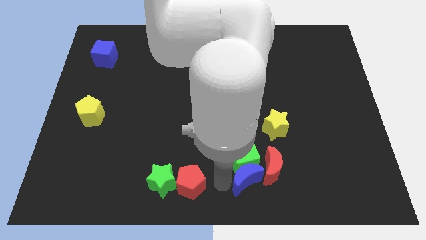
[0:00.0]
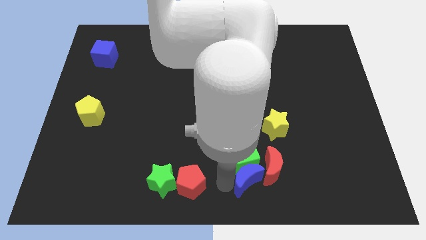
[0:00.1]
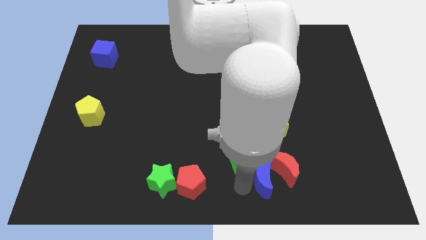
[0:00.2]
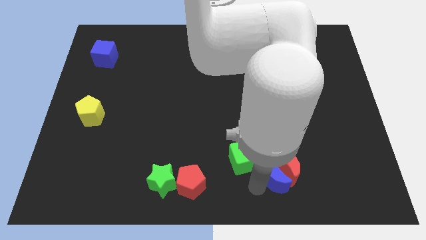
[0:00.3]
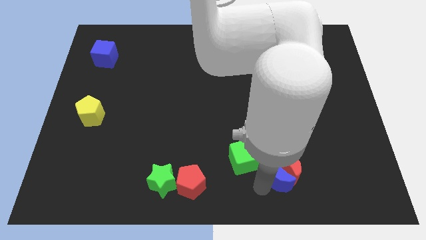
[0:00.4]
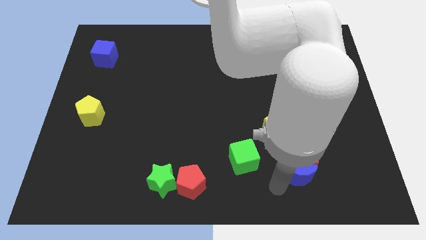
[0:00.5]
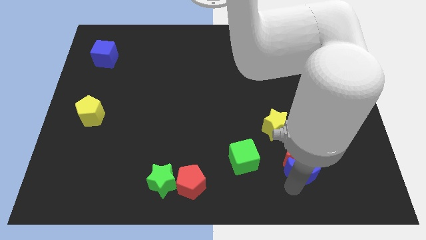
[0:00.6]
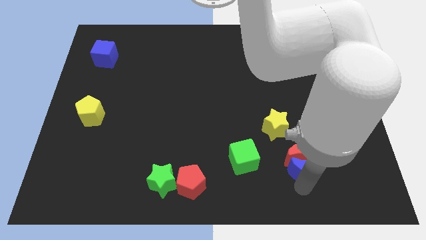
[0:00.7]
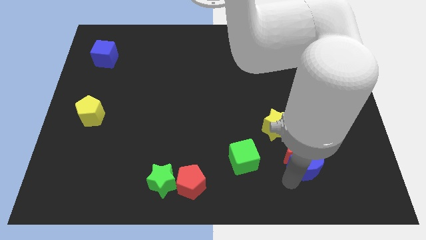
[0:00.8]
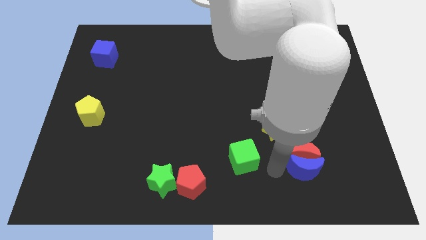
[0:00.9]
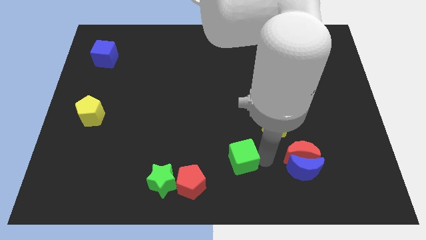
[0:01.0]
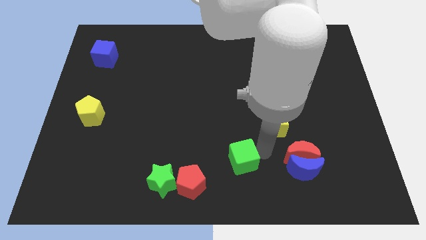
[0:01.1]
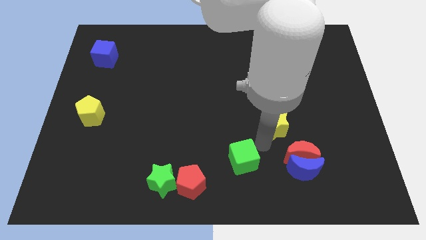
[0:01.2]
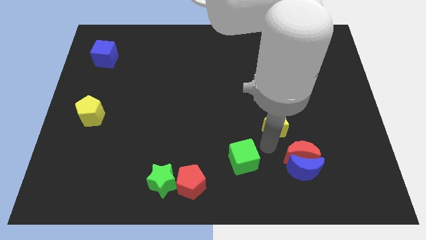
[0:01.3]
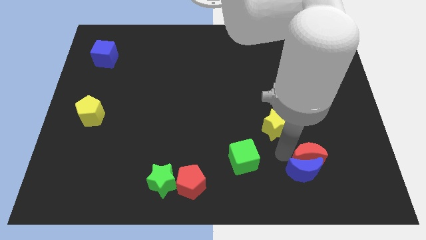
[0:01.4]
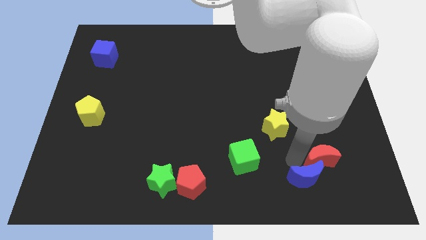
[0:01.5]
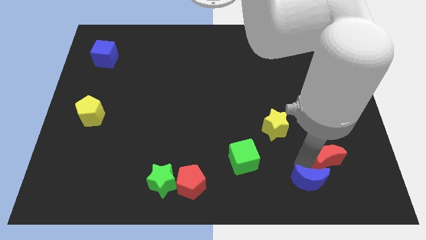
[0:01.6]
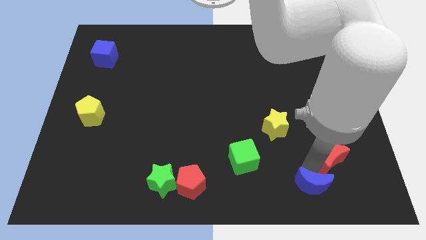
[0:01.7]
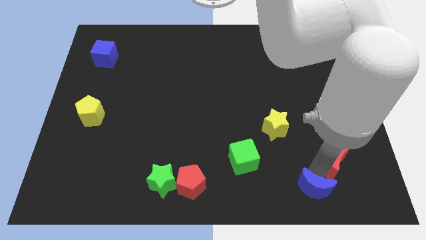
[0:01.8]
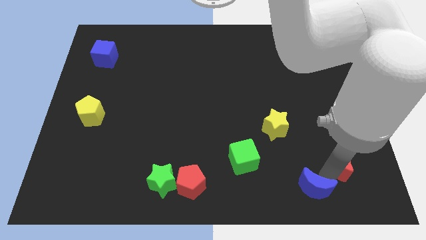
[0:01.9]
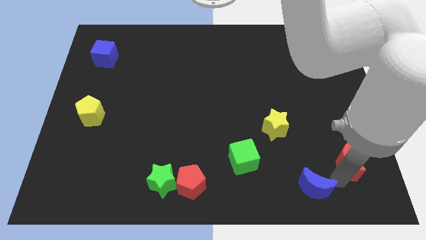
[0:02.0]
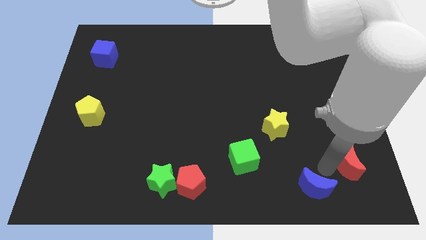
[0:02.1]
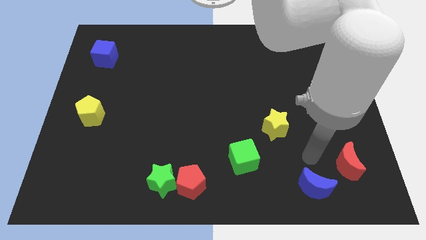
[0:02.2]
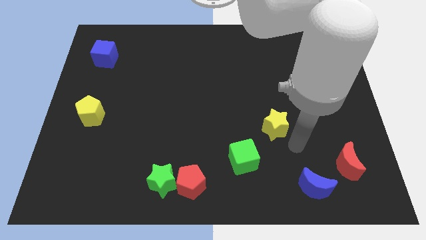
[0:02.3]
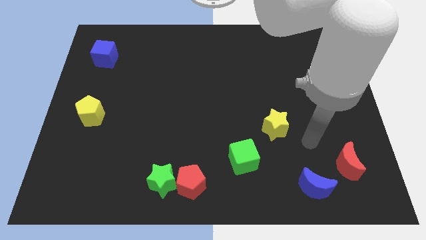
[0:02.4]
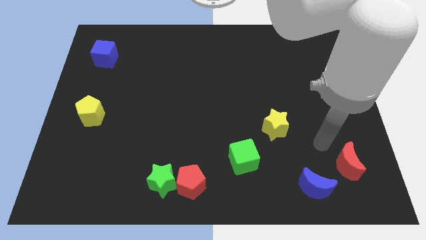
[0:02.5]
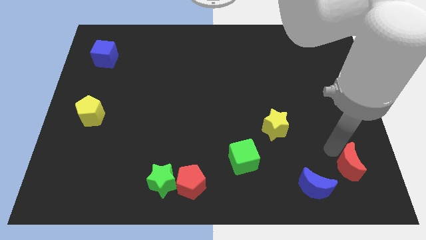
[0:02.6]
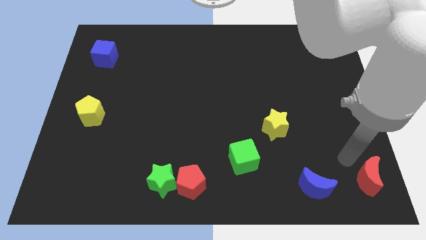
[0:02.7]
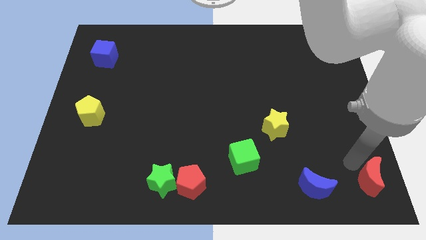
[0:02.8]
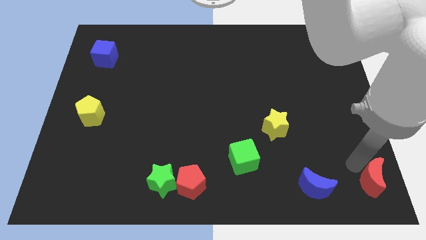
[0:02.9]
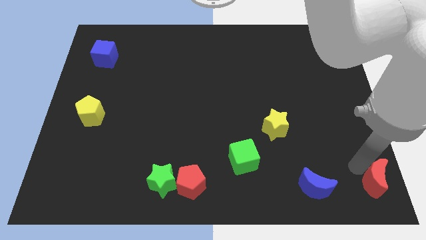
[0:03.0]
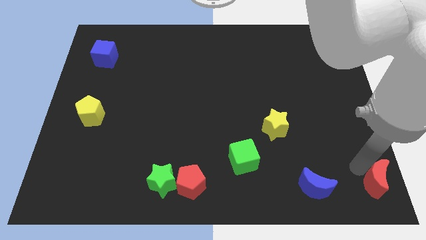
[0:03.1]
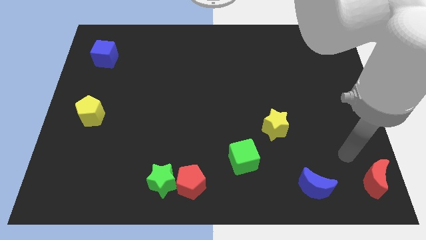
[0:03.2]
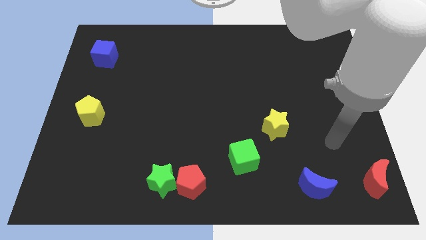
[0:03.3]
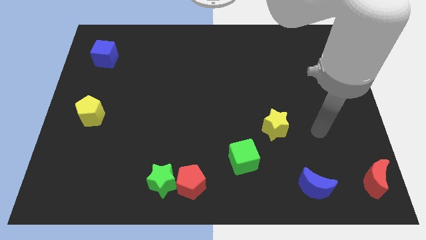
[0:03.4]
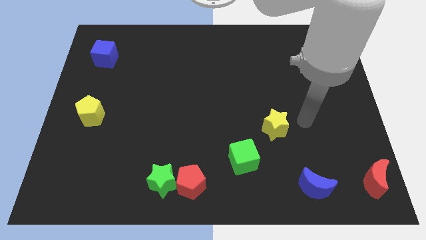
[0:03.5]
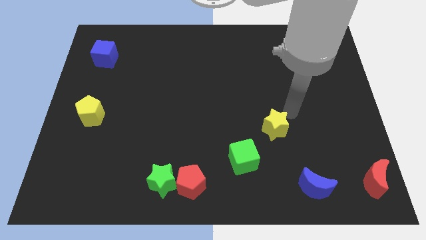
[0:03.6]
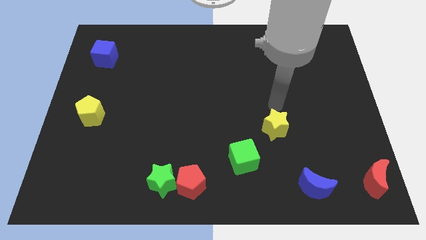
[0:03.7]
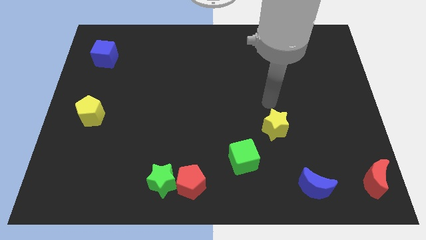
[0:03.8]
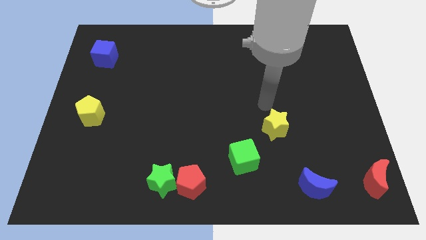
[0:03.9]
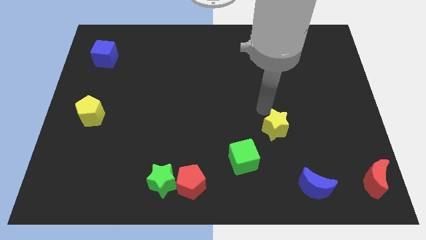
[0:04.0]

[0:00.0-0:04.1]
place red moon to the bottom right of the board

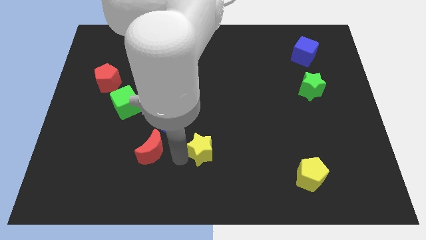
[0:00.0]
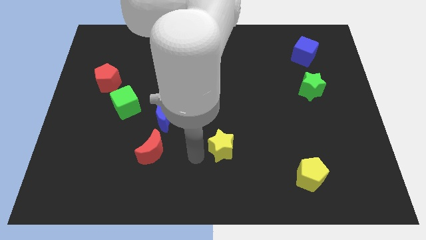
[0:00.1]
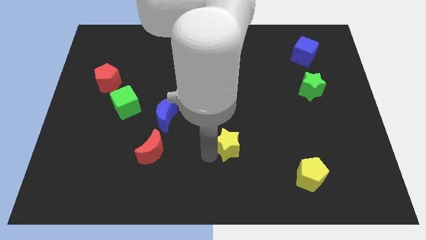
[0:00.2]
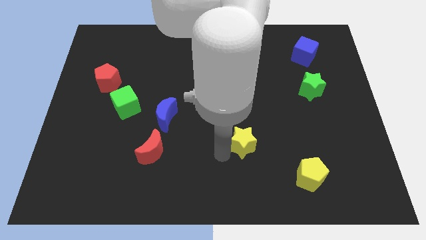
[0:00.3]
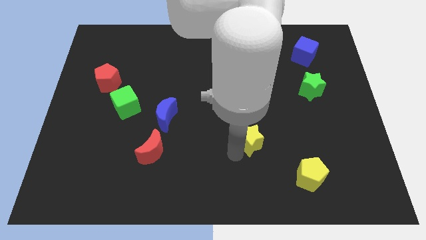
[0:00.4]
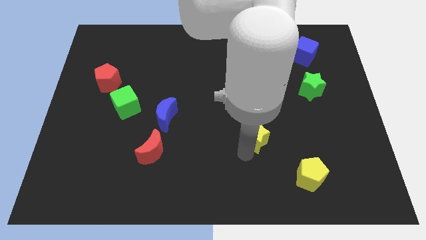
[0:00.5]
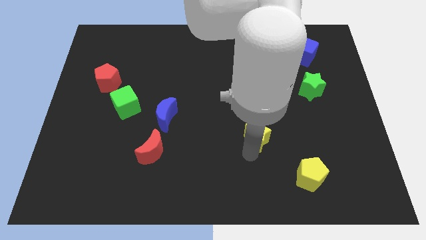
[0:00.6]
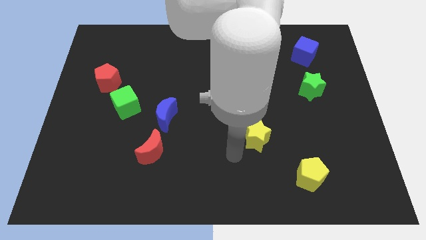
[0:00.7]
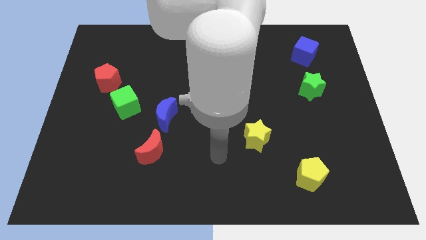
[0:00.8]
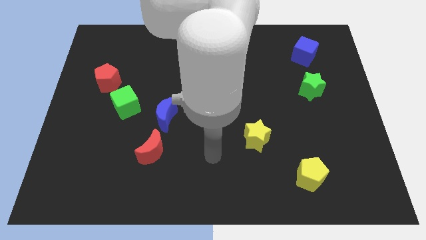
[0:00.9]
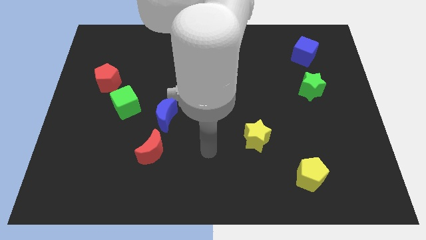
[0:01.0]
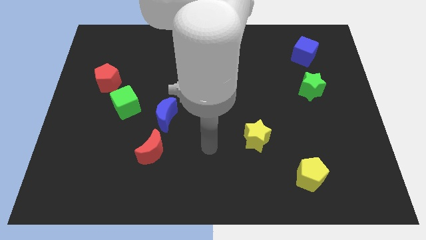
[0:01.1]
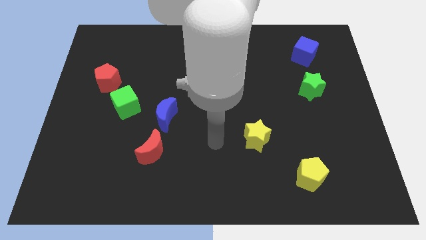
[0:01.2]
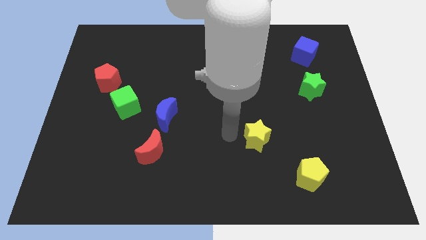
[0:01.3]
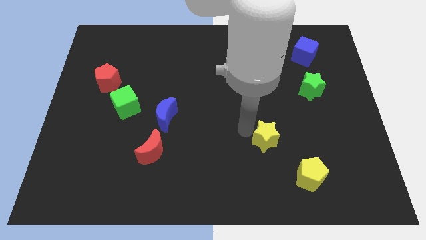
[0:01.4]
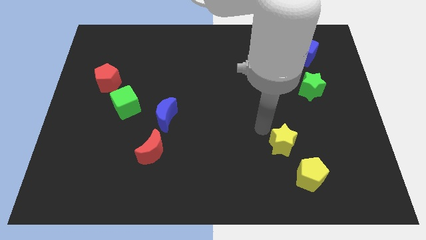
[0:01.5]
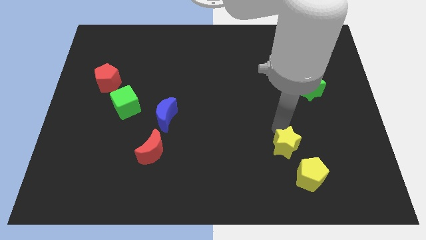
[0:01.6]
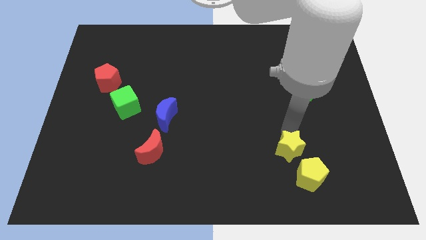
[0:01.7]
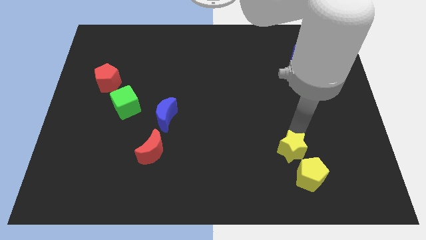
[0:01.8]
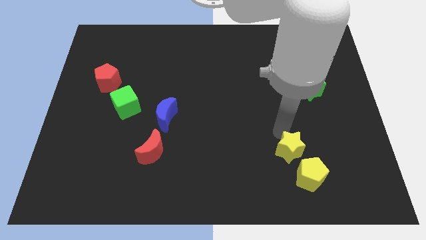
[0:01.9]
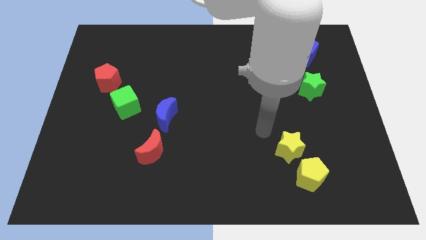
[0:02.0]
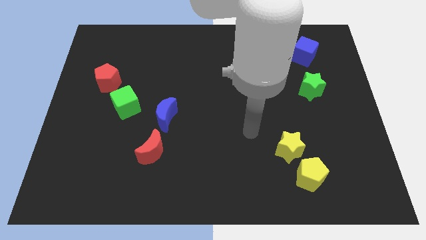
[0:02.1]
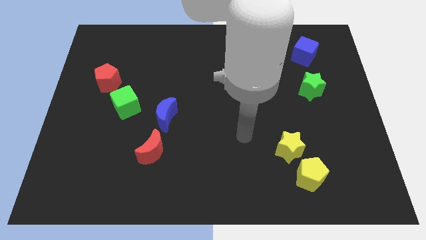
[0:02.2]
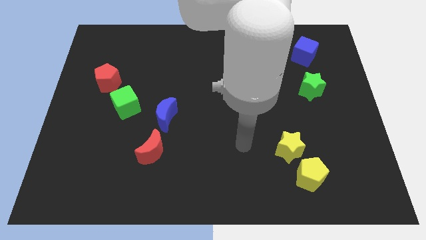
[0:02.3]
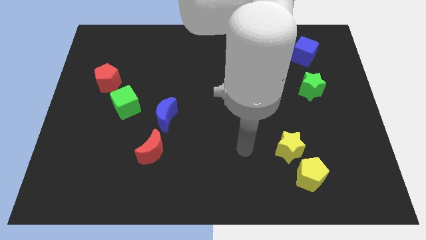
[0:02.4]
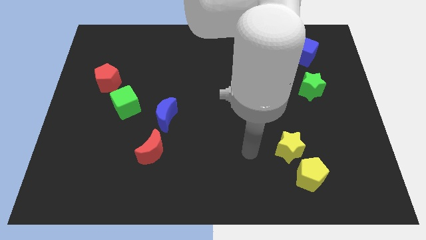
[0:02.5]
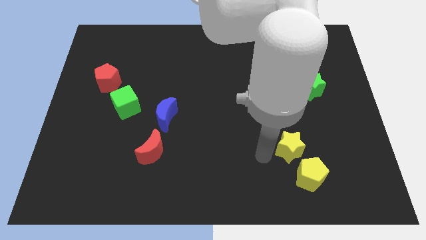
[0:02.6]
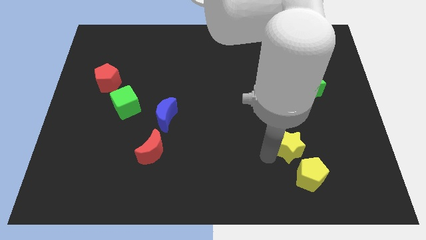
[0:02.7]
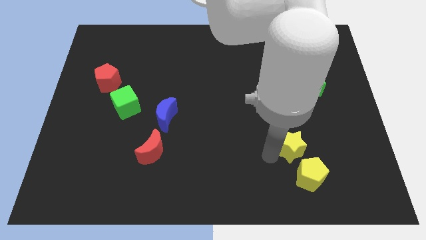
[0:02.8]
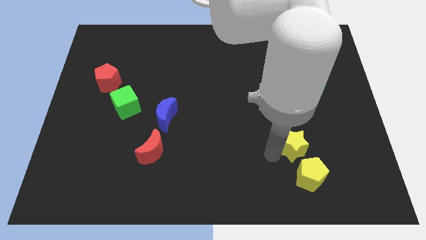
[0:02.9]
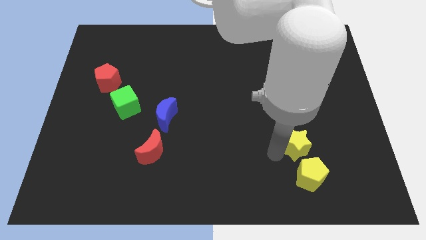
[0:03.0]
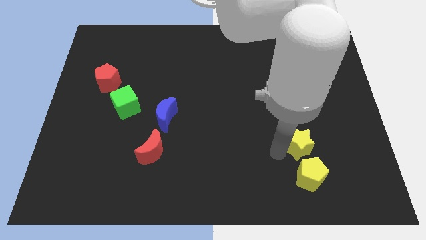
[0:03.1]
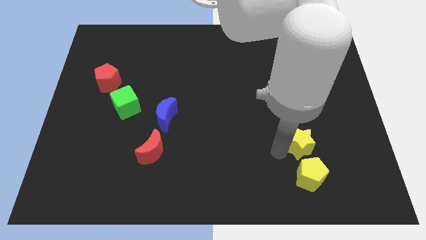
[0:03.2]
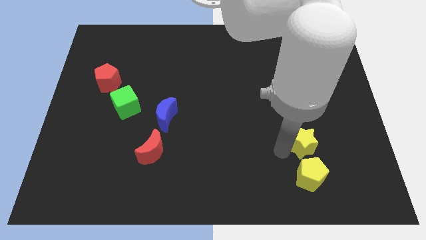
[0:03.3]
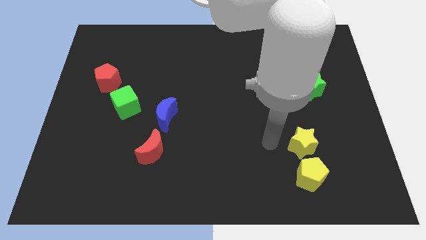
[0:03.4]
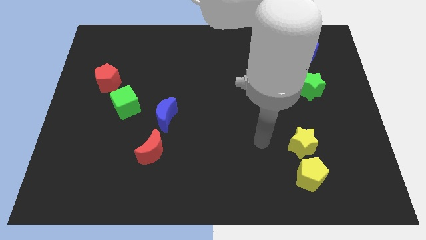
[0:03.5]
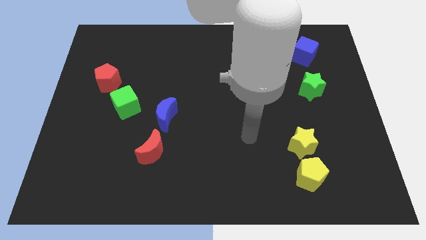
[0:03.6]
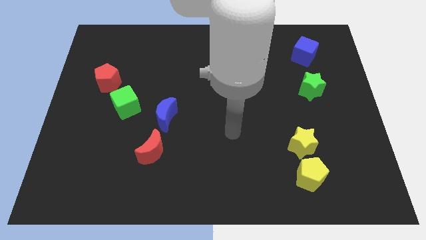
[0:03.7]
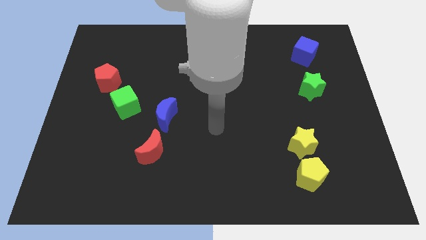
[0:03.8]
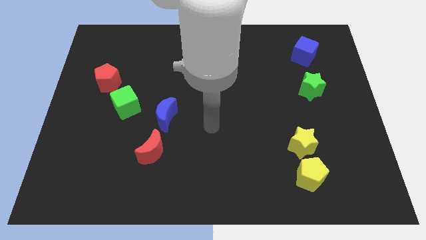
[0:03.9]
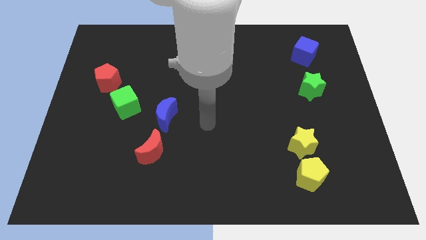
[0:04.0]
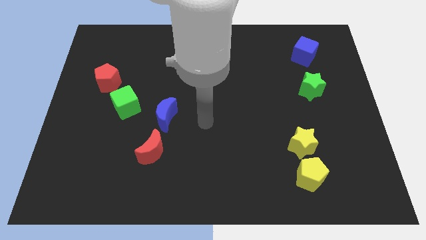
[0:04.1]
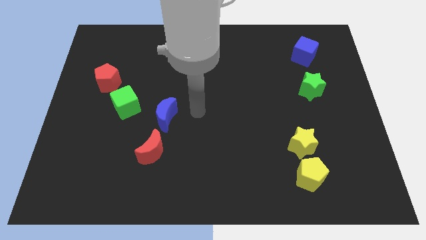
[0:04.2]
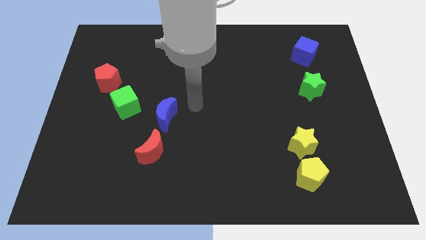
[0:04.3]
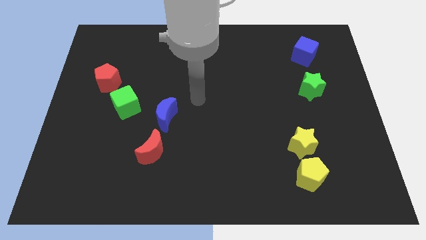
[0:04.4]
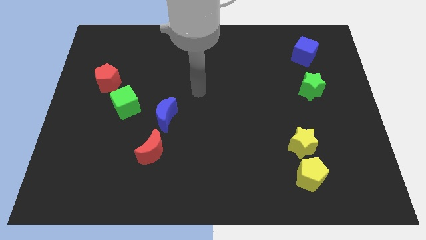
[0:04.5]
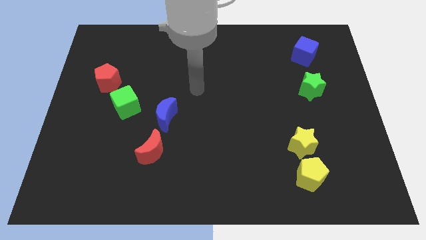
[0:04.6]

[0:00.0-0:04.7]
place the yellow star in between the green star and yellow pentagon

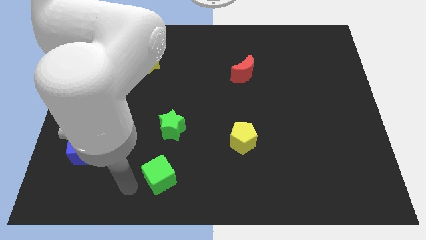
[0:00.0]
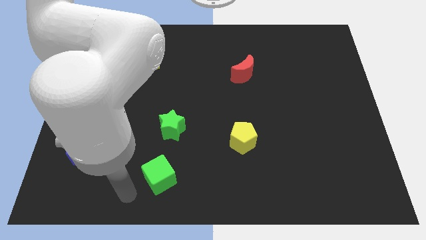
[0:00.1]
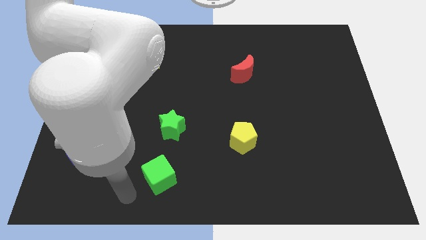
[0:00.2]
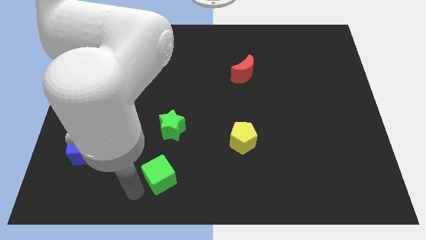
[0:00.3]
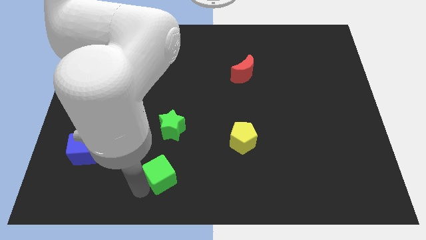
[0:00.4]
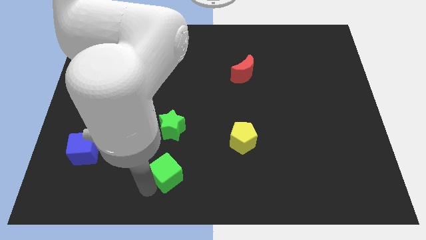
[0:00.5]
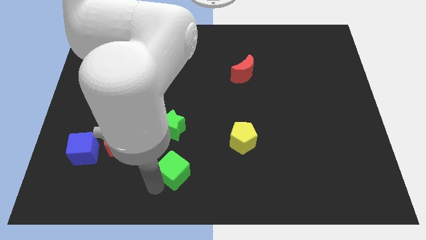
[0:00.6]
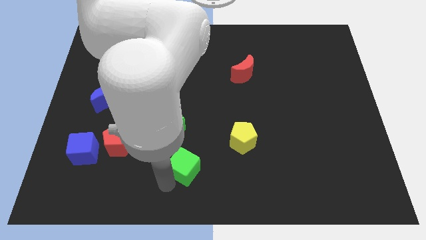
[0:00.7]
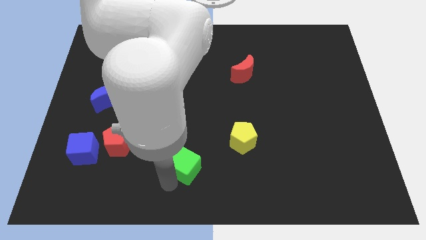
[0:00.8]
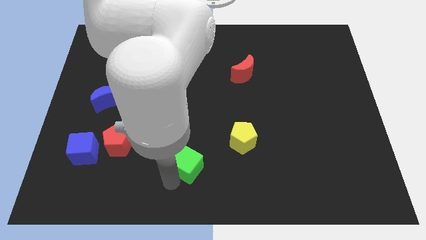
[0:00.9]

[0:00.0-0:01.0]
move the green cube parallel to the green star
